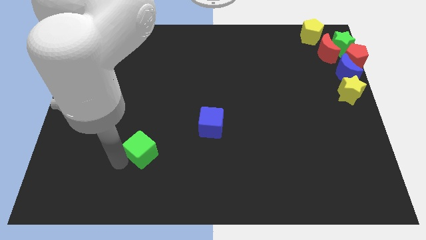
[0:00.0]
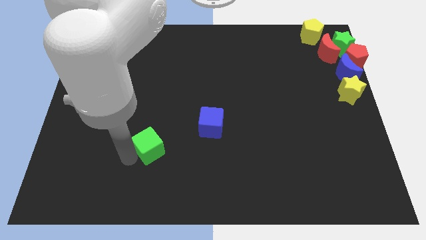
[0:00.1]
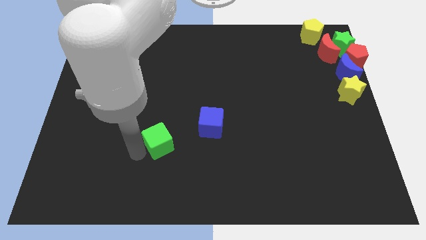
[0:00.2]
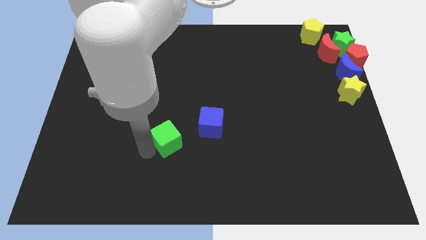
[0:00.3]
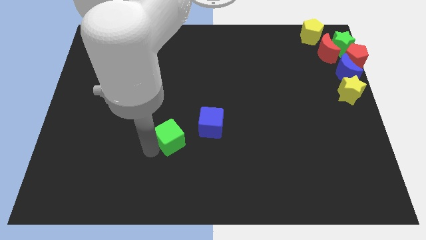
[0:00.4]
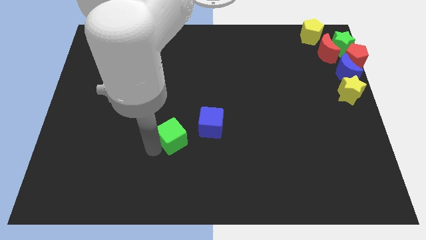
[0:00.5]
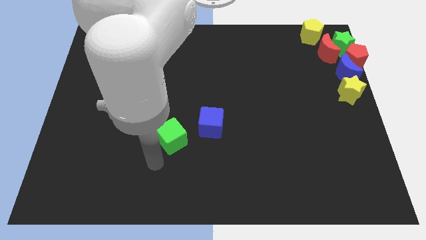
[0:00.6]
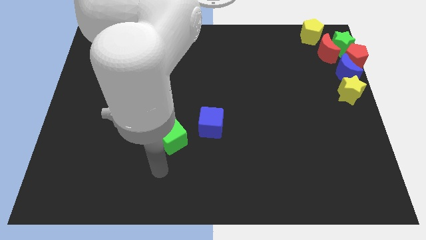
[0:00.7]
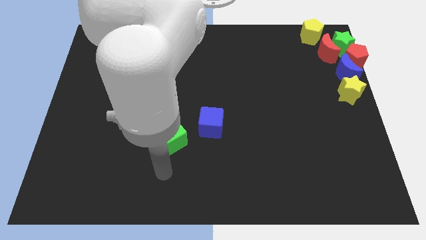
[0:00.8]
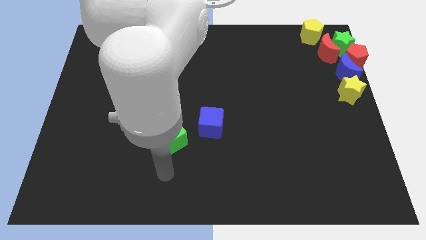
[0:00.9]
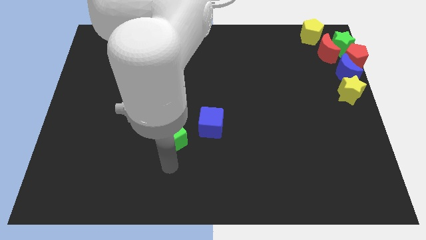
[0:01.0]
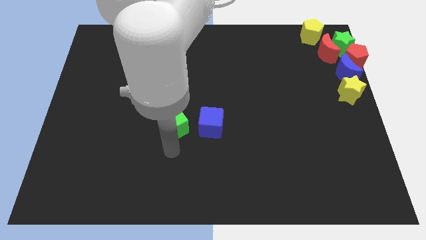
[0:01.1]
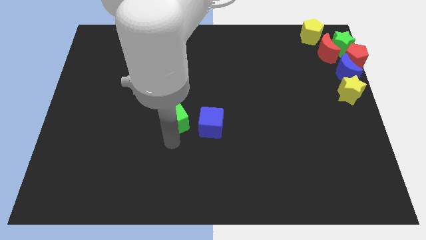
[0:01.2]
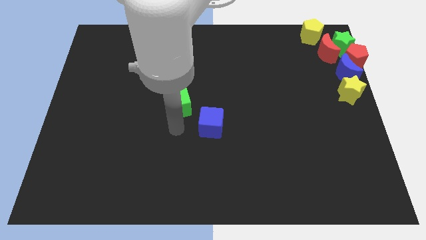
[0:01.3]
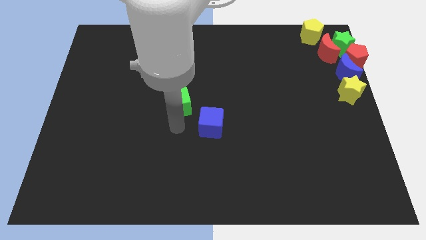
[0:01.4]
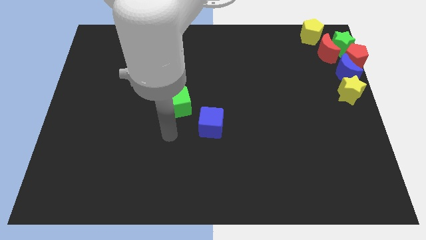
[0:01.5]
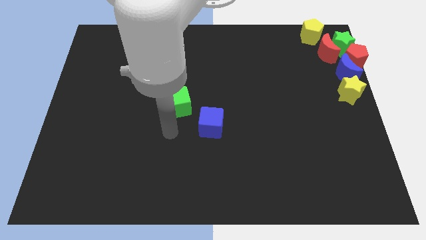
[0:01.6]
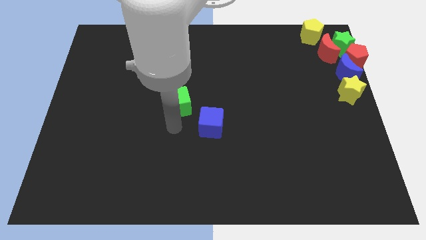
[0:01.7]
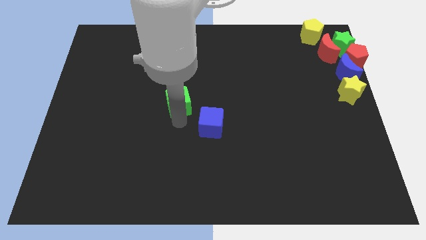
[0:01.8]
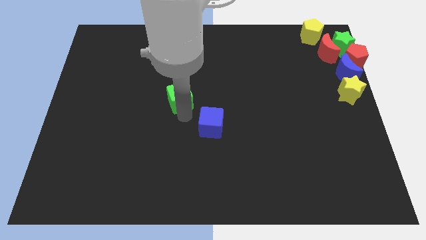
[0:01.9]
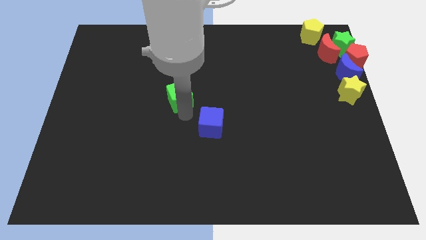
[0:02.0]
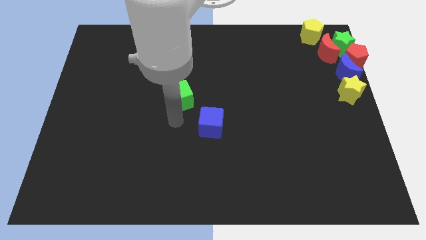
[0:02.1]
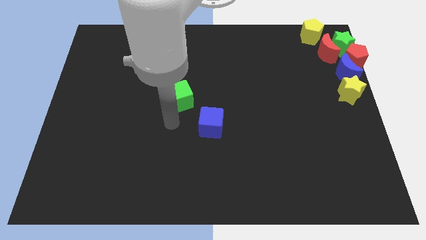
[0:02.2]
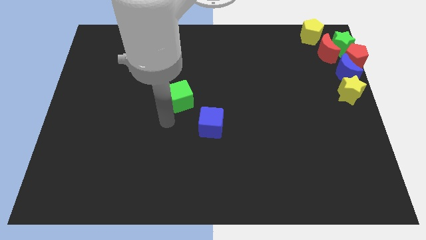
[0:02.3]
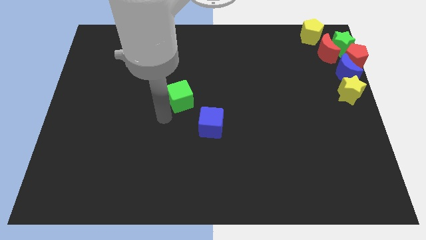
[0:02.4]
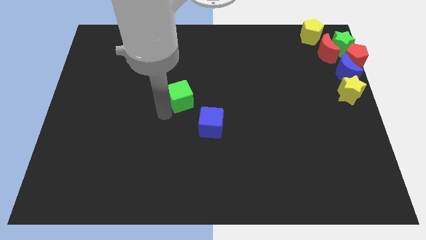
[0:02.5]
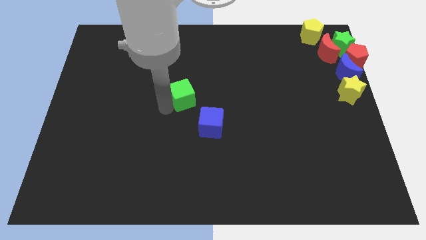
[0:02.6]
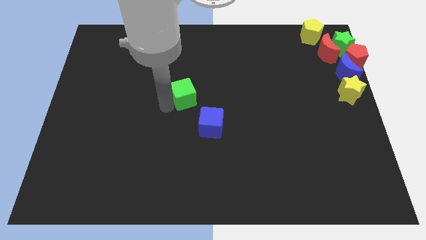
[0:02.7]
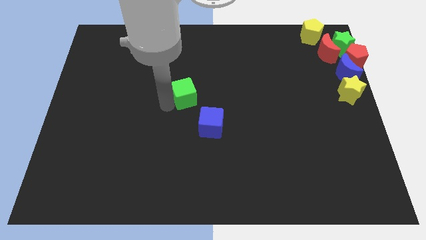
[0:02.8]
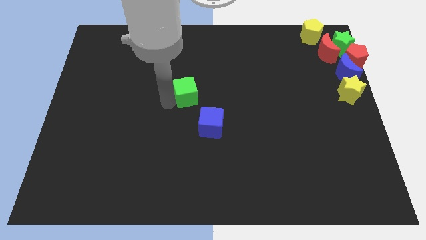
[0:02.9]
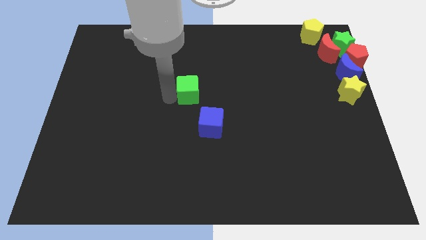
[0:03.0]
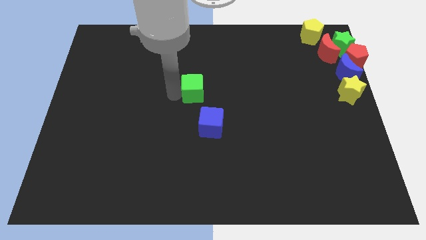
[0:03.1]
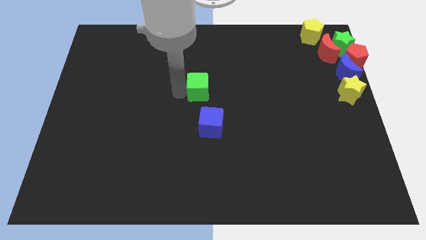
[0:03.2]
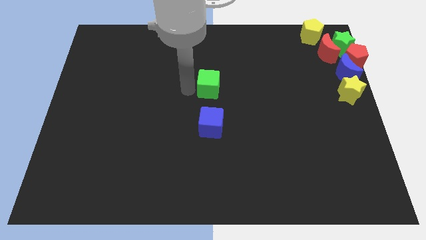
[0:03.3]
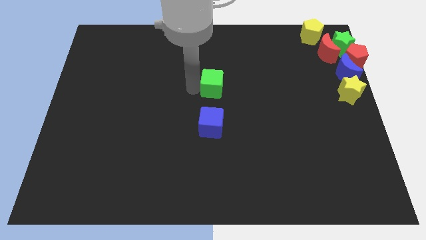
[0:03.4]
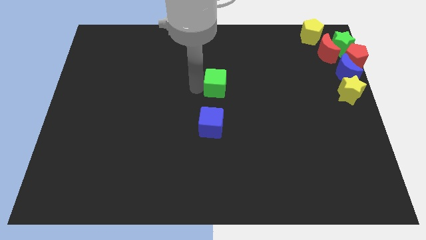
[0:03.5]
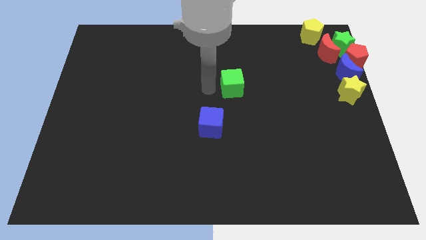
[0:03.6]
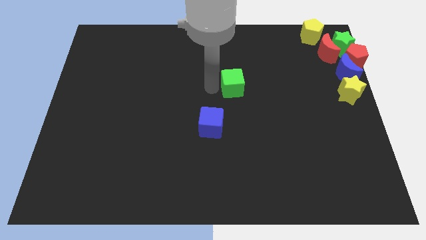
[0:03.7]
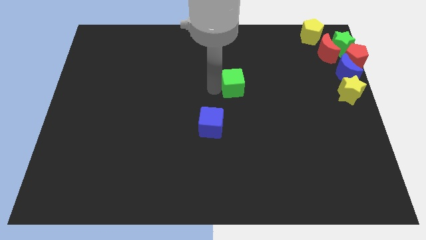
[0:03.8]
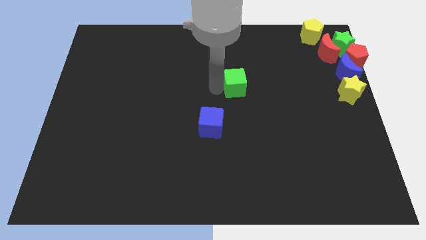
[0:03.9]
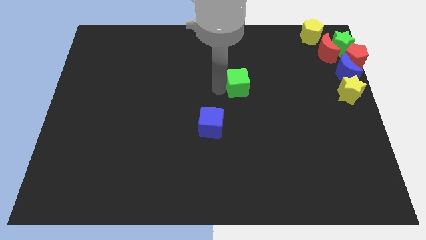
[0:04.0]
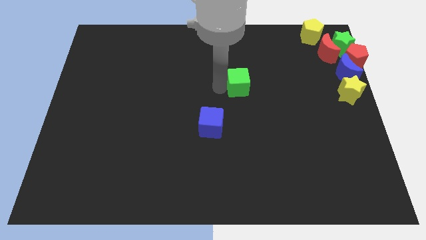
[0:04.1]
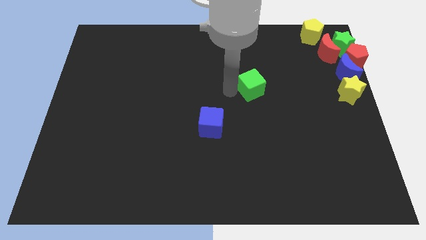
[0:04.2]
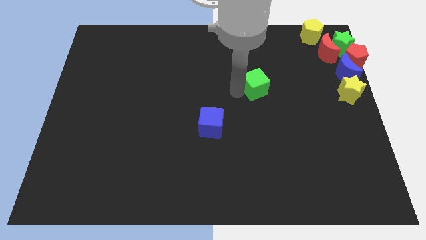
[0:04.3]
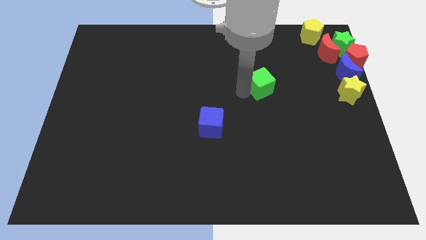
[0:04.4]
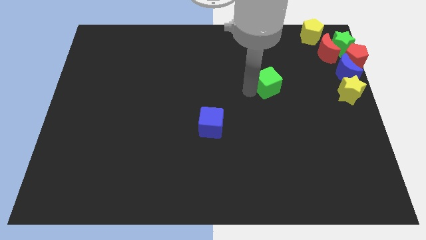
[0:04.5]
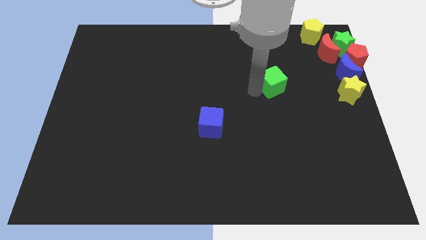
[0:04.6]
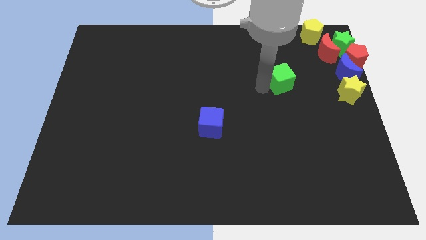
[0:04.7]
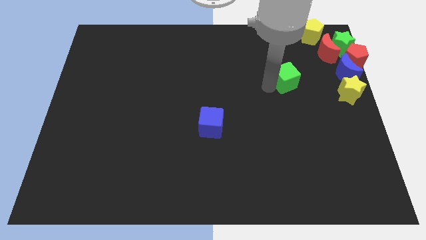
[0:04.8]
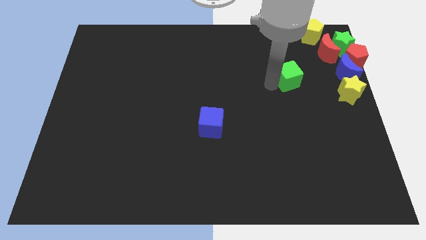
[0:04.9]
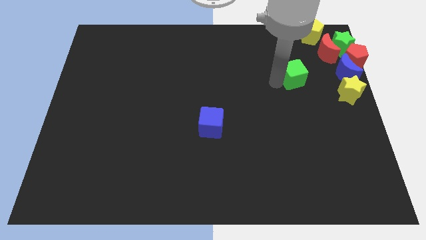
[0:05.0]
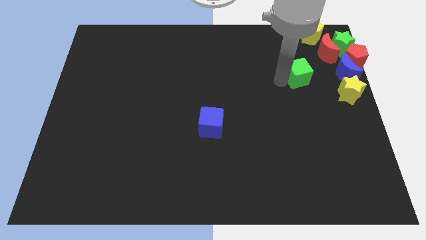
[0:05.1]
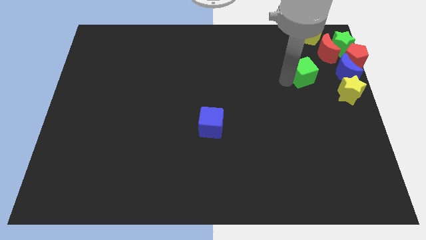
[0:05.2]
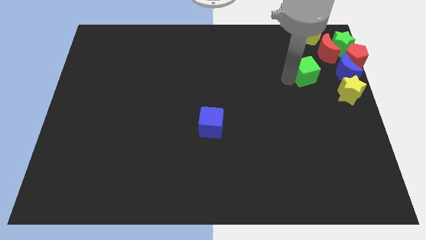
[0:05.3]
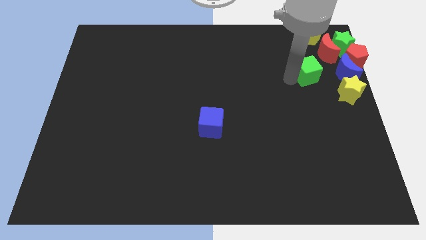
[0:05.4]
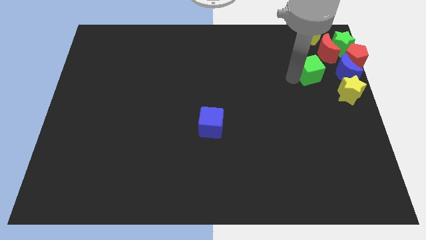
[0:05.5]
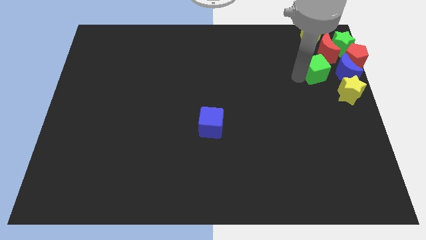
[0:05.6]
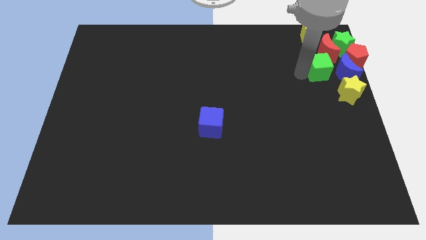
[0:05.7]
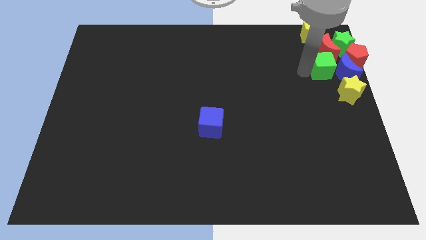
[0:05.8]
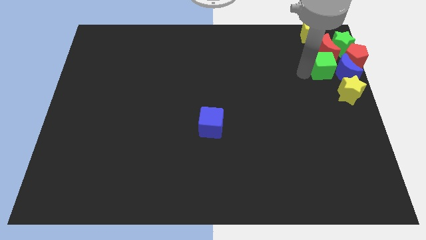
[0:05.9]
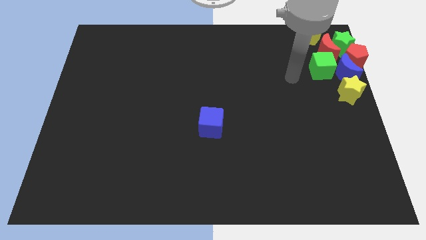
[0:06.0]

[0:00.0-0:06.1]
move the green cube horizontally left side of the blue crescent

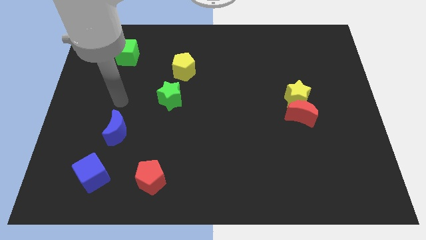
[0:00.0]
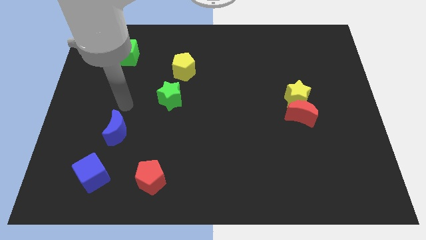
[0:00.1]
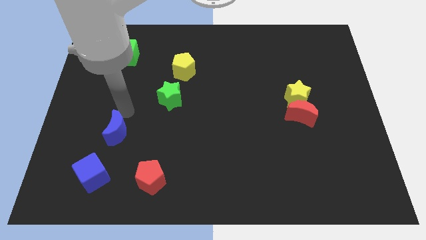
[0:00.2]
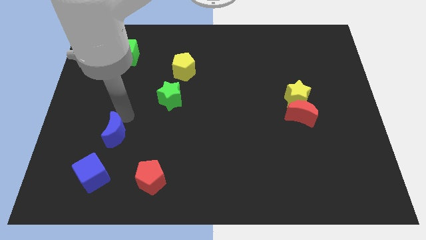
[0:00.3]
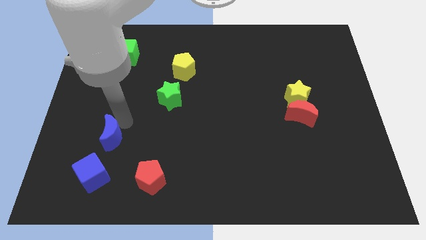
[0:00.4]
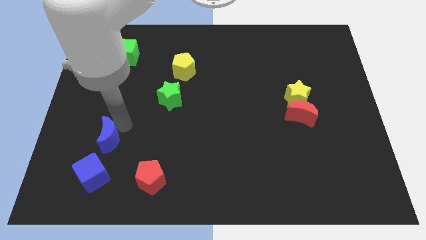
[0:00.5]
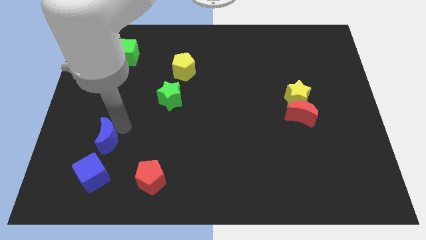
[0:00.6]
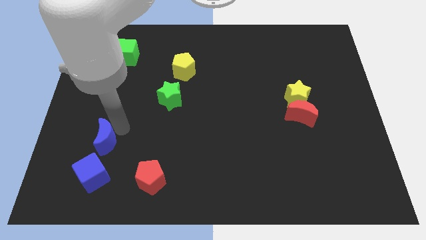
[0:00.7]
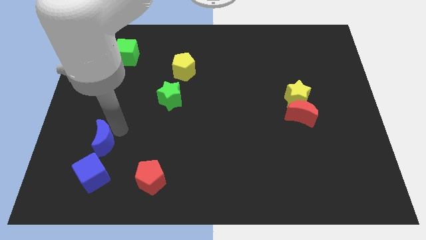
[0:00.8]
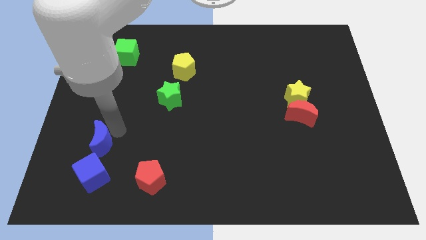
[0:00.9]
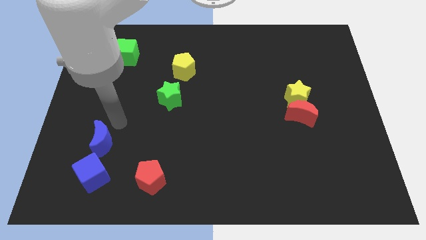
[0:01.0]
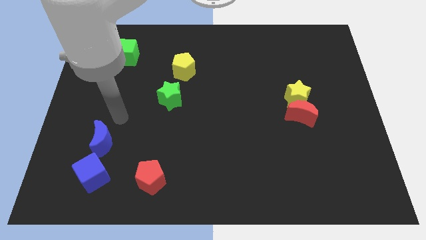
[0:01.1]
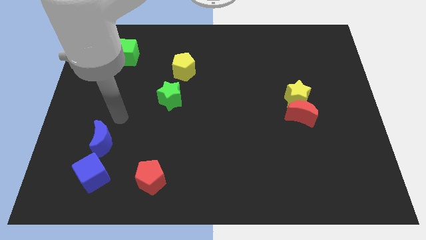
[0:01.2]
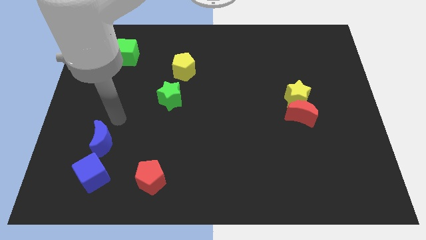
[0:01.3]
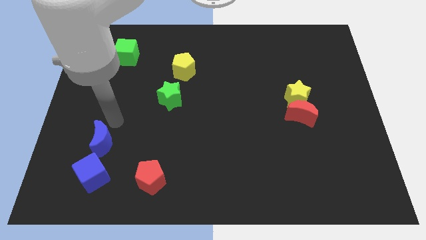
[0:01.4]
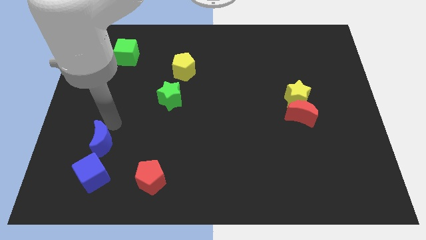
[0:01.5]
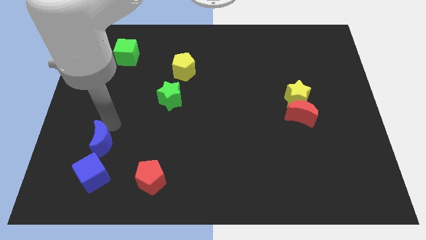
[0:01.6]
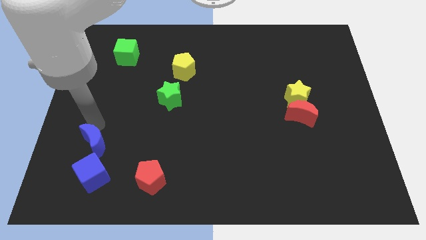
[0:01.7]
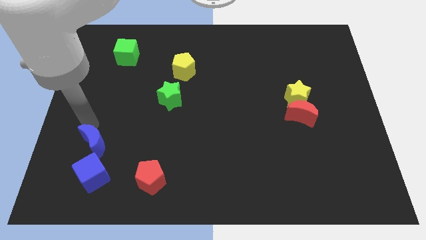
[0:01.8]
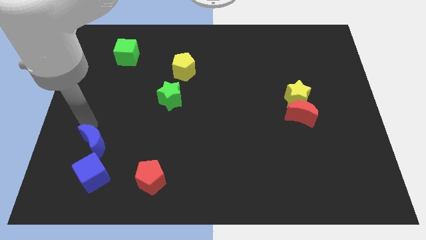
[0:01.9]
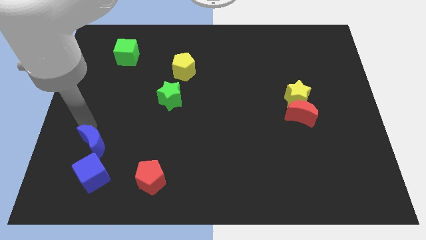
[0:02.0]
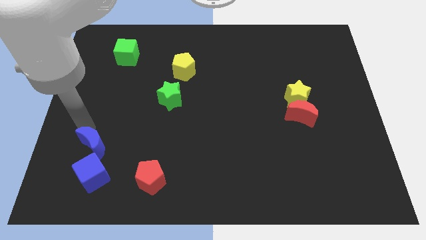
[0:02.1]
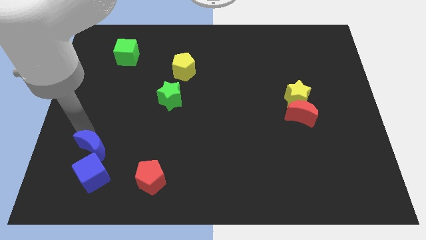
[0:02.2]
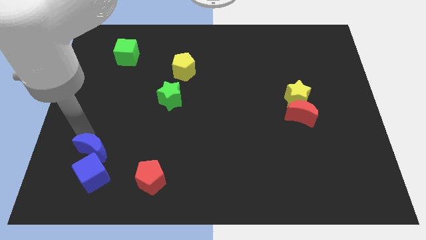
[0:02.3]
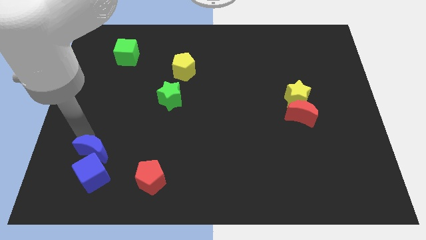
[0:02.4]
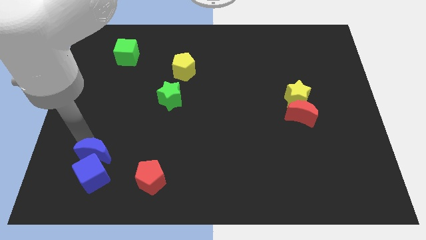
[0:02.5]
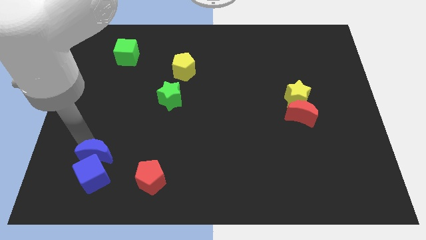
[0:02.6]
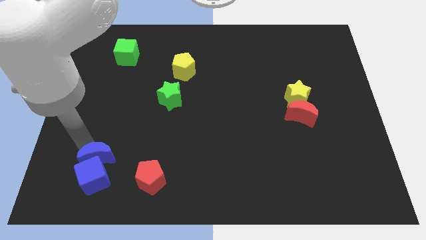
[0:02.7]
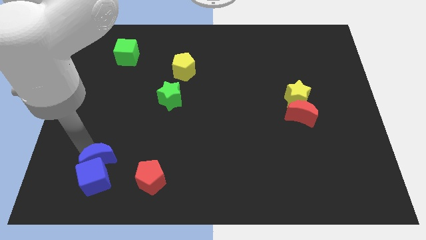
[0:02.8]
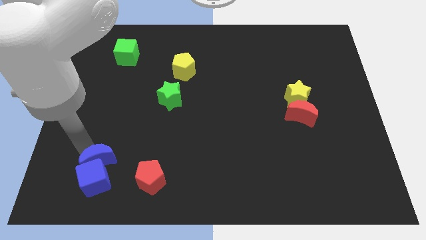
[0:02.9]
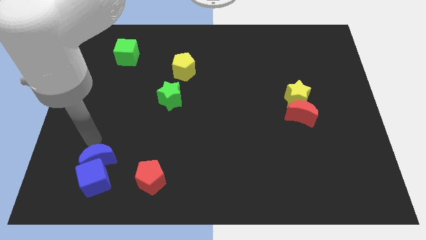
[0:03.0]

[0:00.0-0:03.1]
push the blue moon into the blue cube
